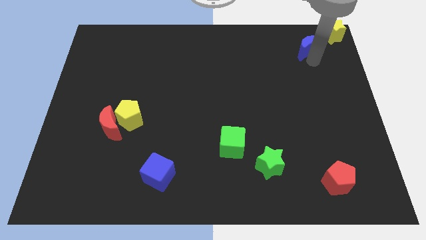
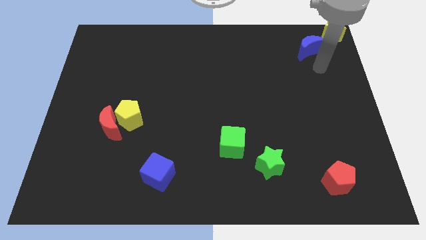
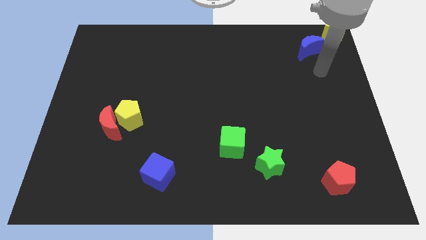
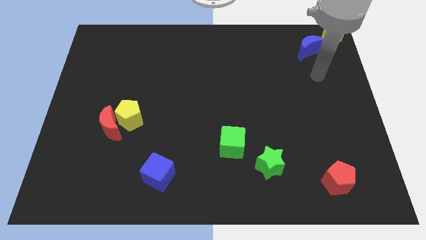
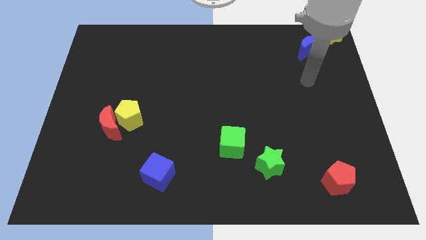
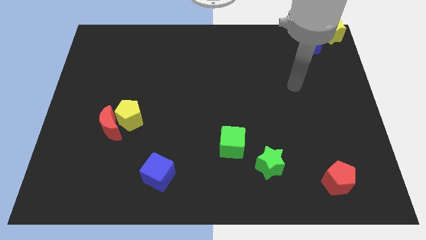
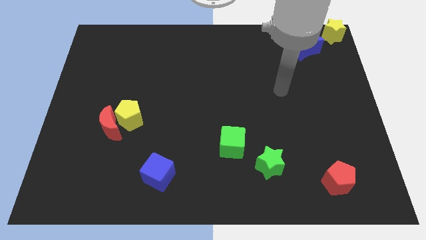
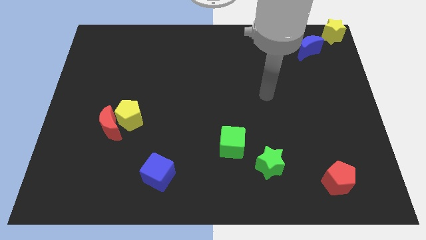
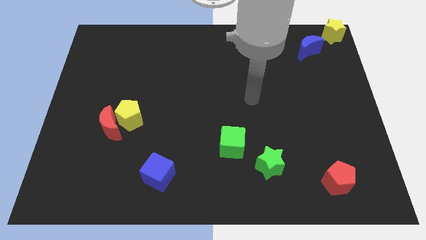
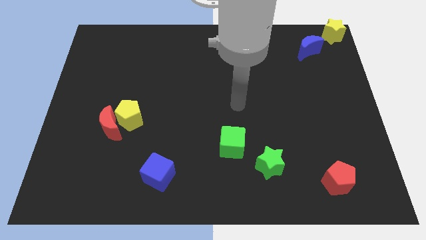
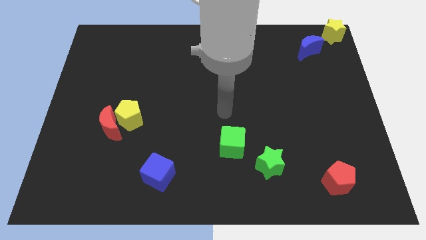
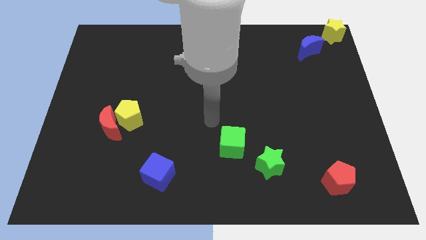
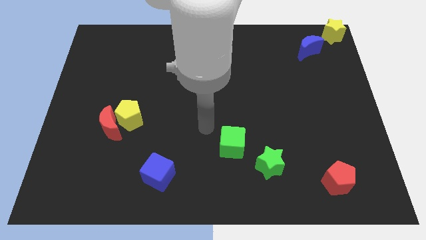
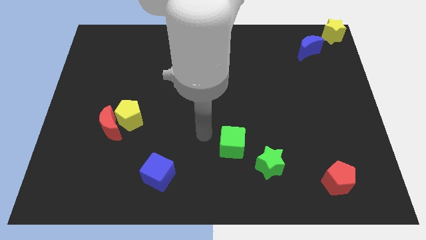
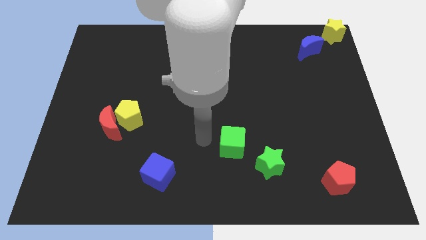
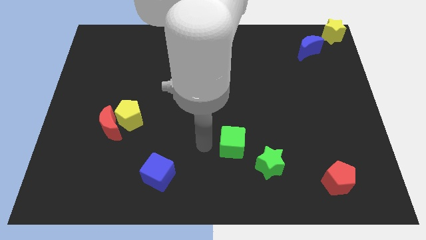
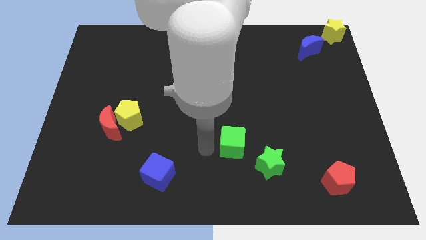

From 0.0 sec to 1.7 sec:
move your hand to the left of green cube

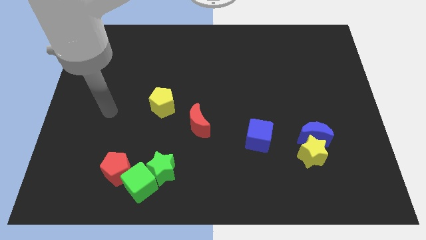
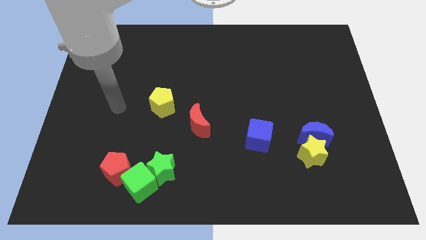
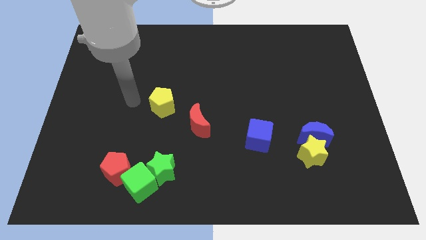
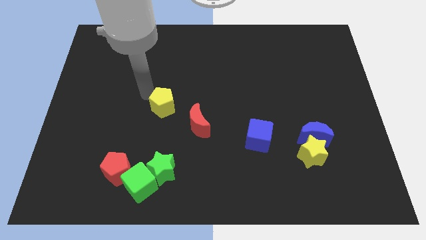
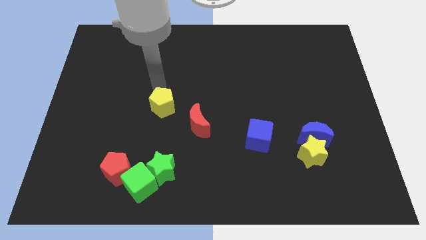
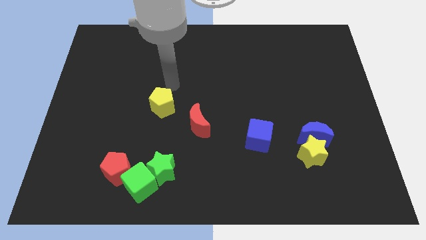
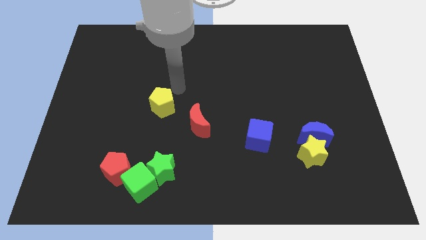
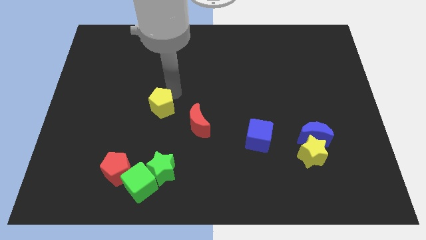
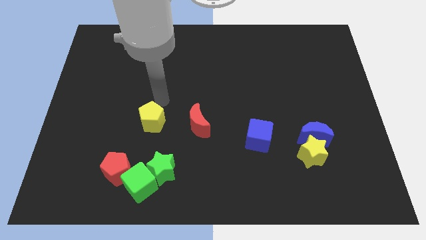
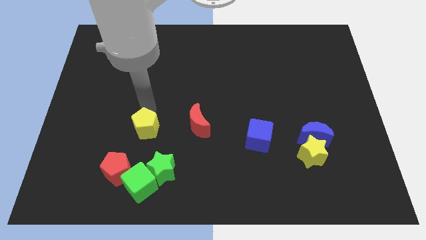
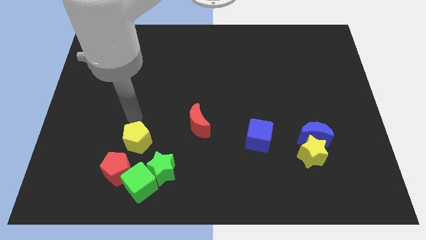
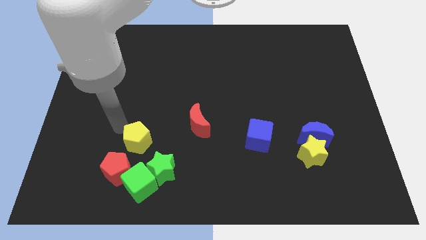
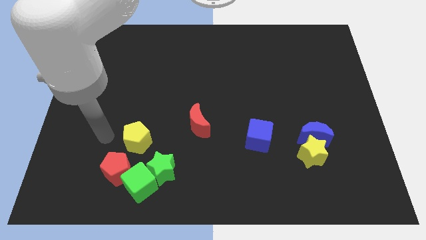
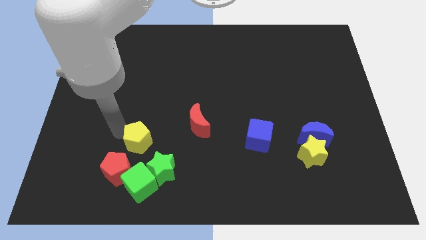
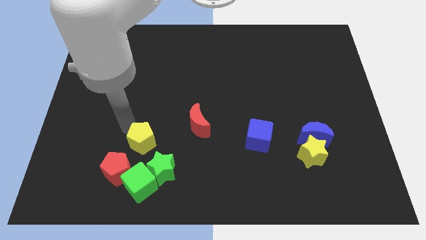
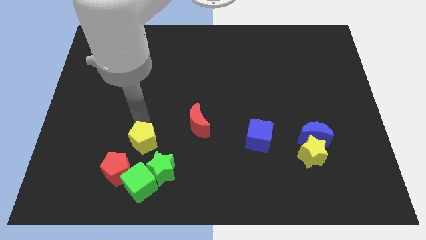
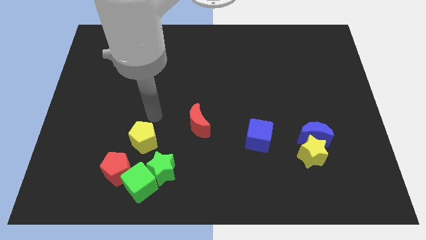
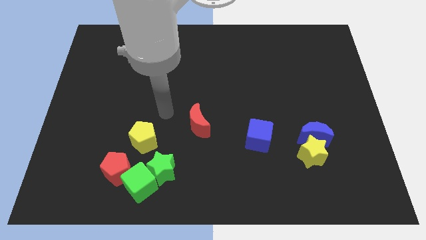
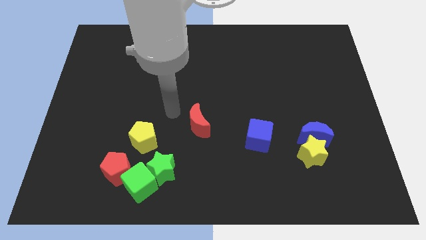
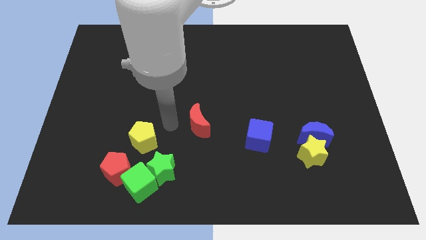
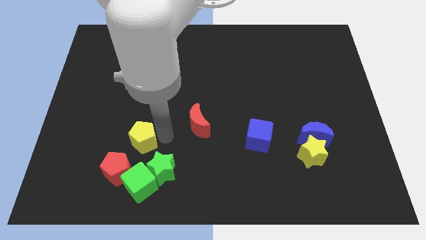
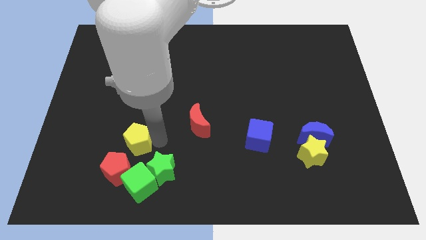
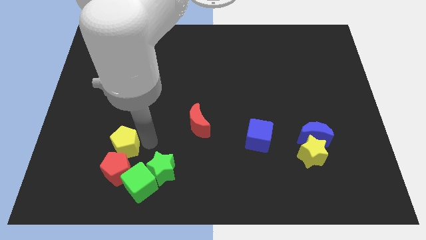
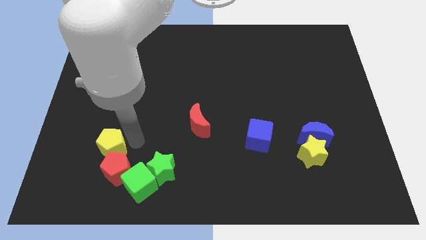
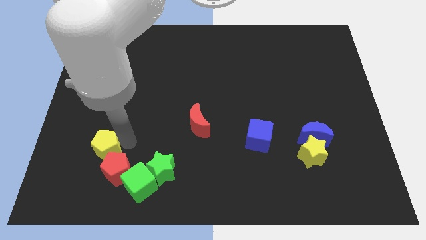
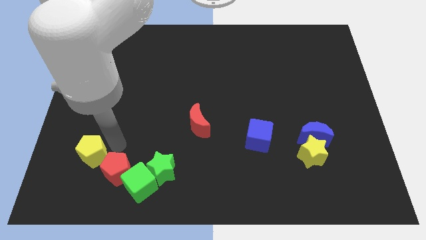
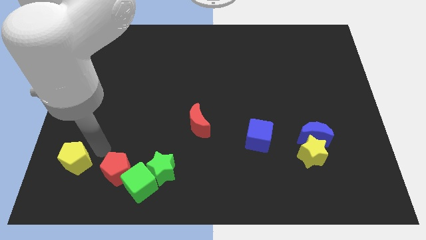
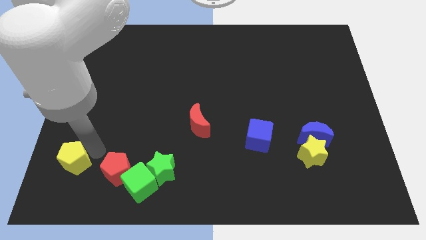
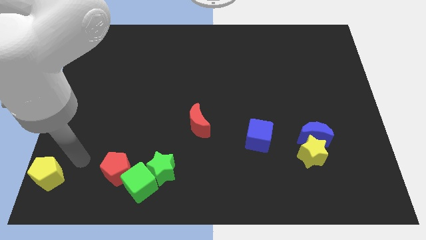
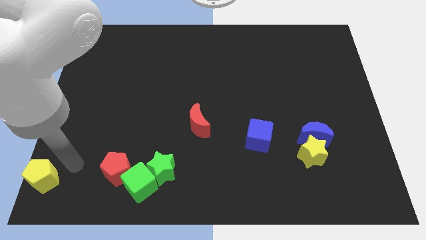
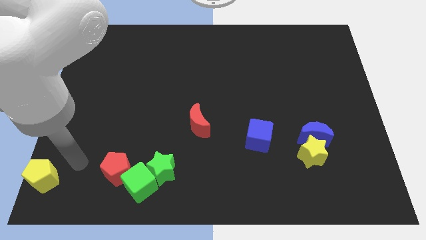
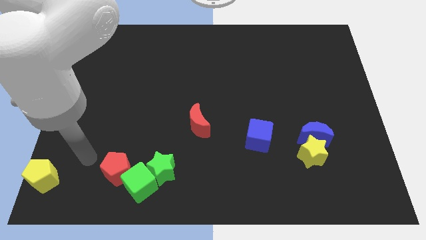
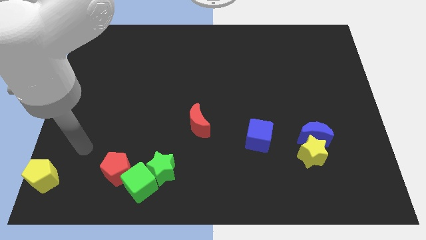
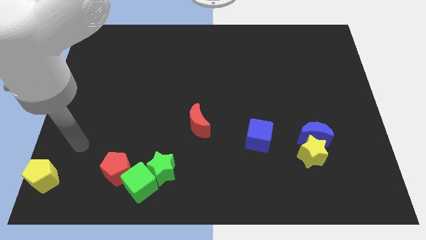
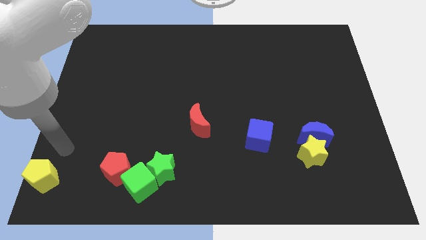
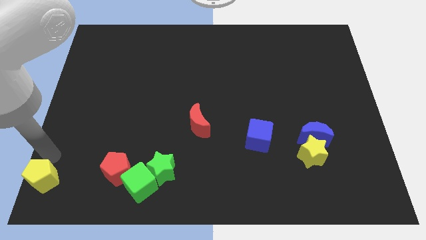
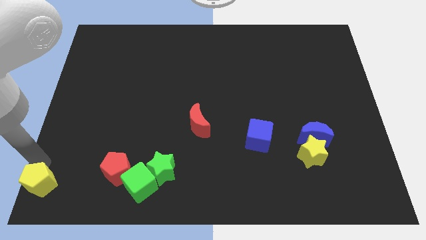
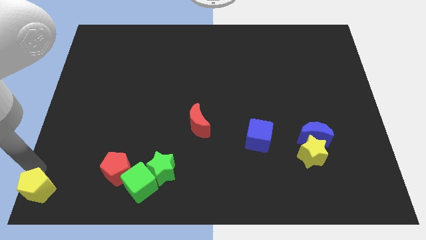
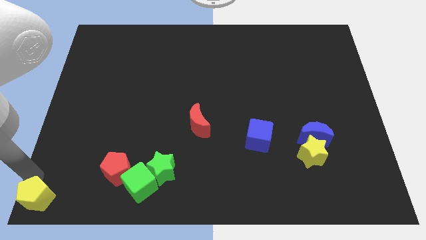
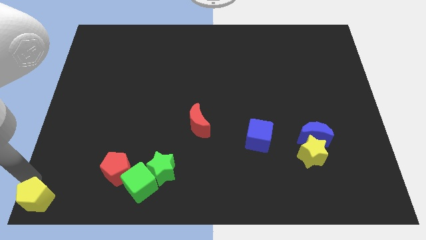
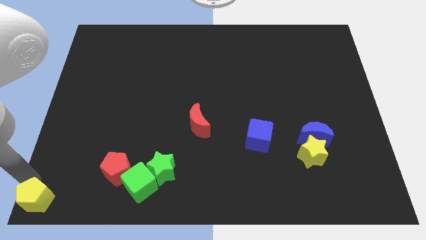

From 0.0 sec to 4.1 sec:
move yellow pentagon towards bottom left

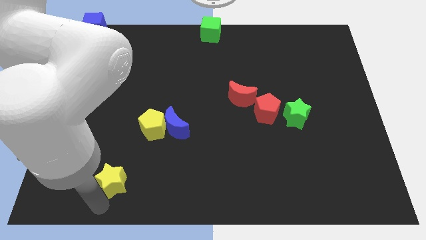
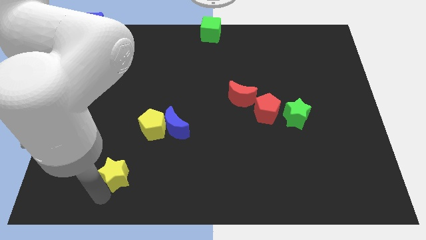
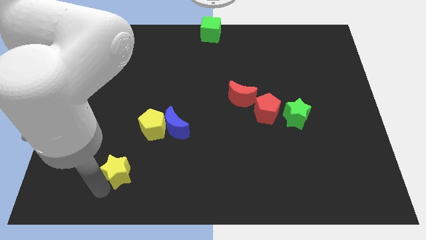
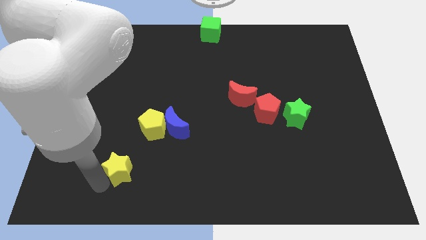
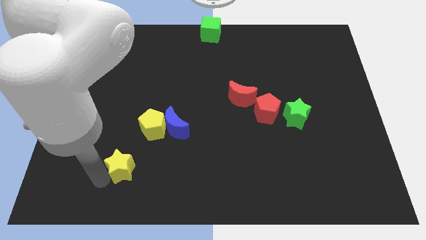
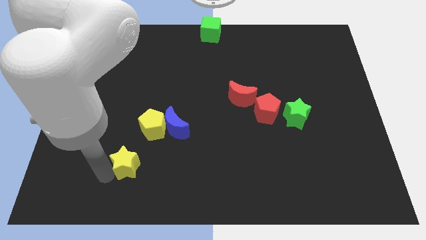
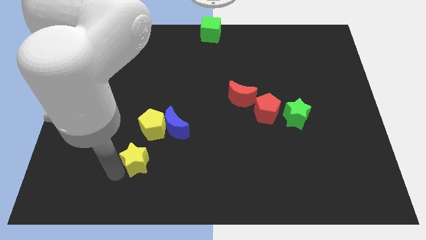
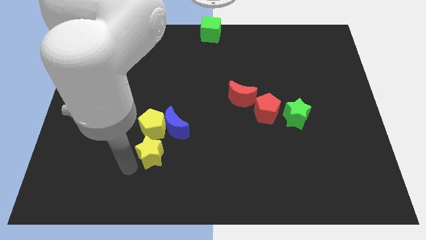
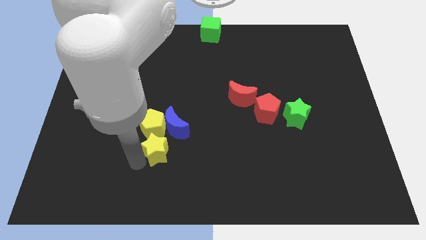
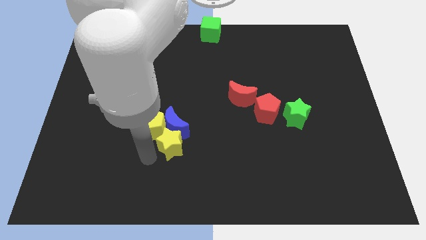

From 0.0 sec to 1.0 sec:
push the yellow star towards blue moon

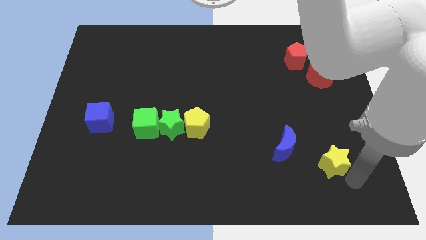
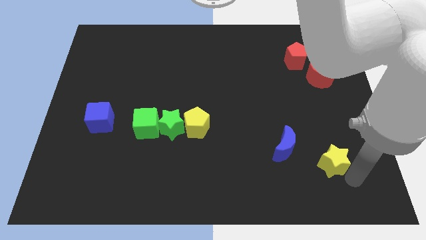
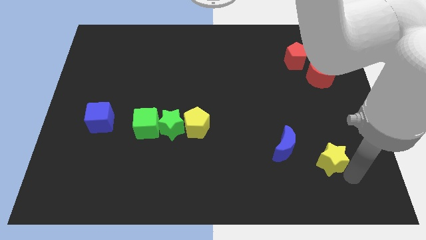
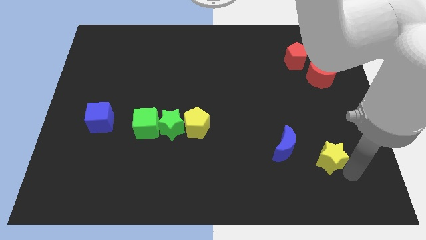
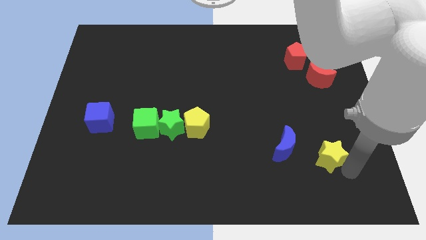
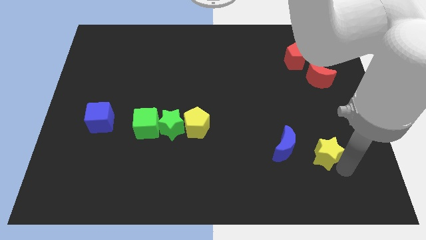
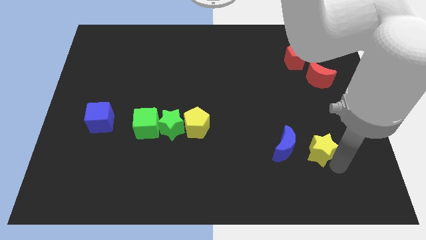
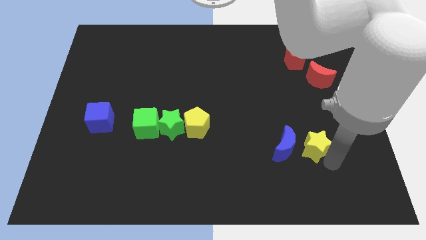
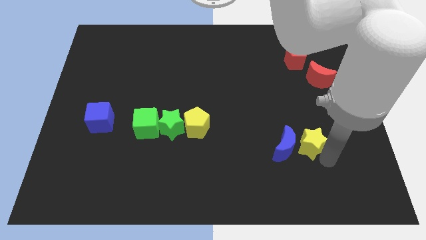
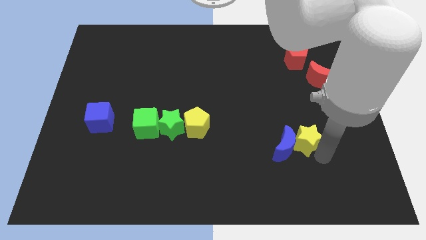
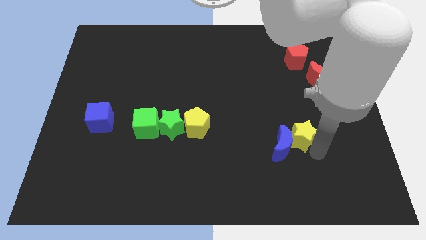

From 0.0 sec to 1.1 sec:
push the yellow star close to the blue moon

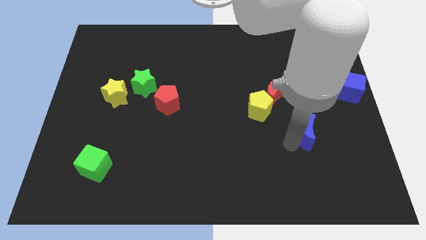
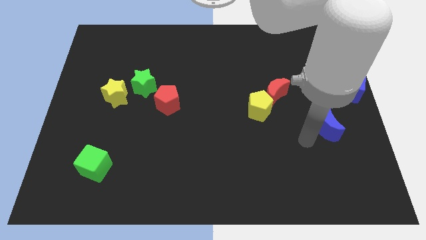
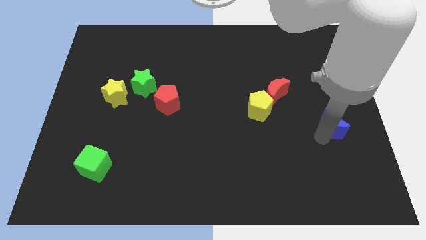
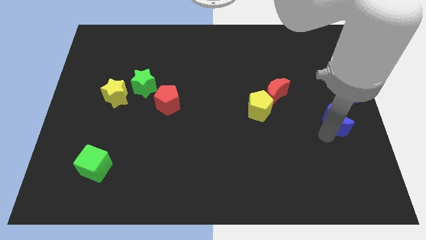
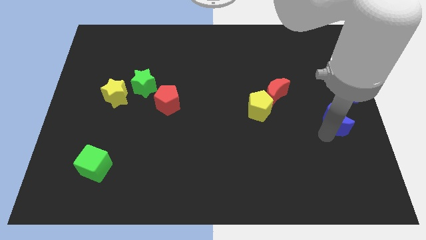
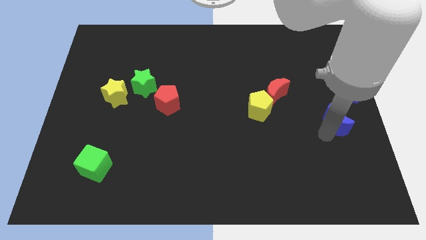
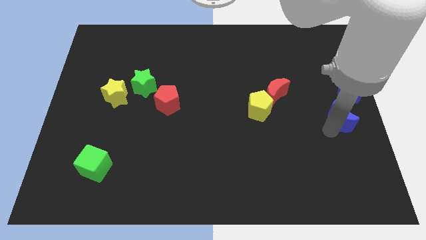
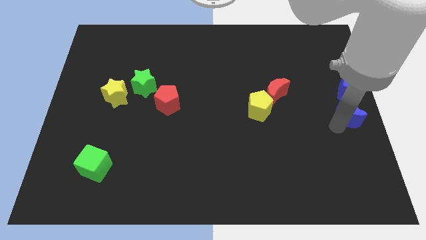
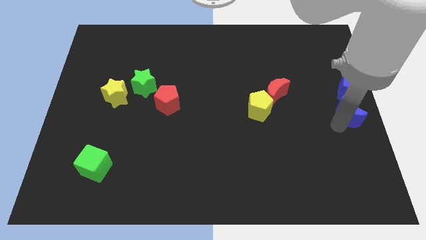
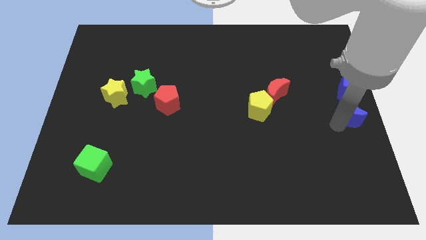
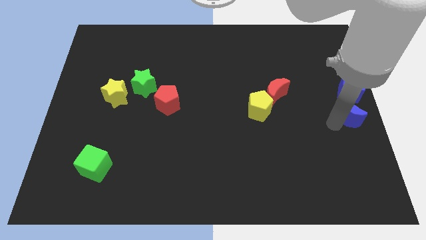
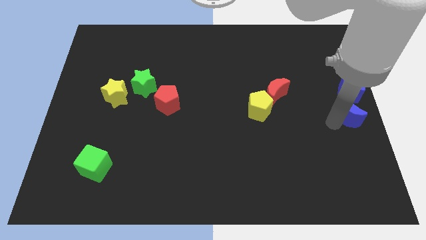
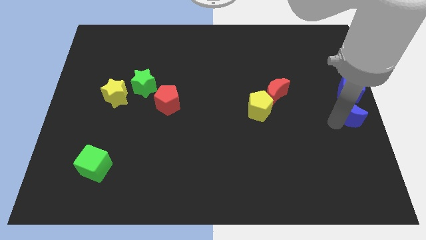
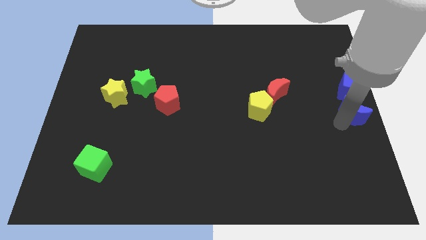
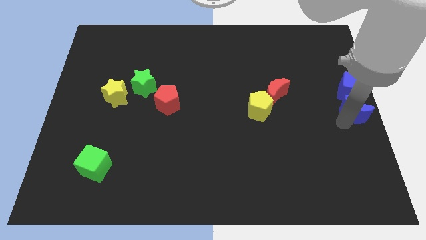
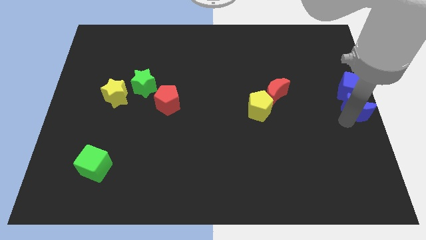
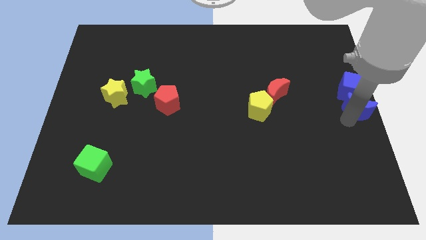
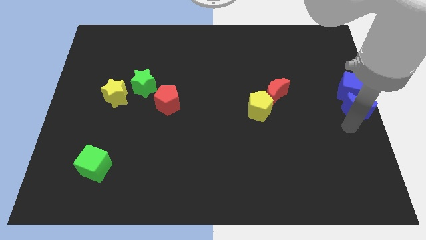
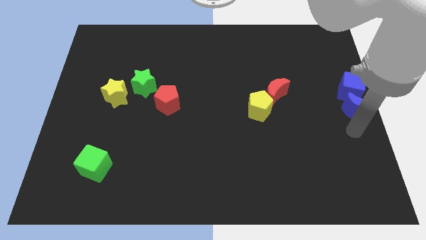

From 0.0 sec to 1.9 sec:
push the blue crescent to the right center
